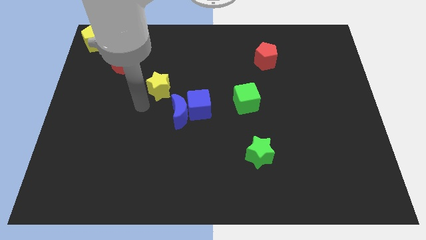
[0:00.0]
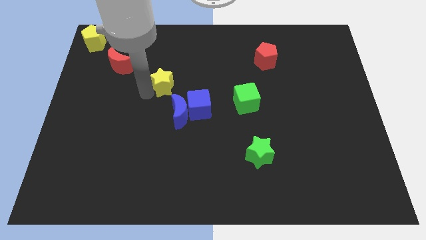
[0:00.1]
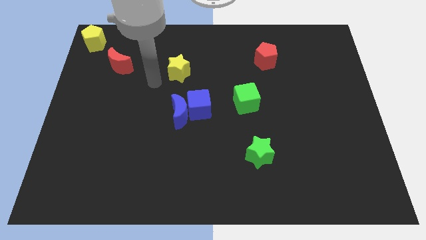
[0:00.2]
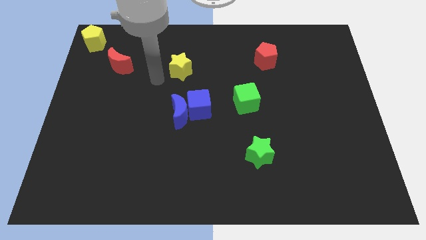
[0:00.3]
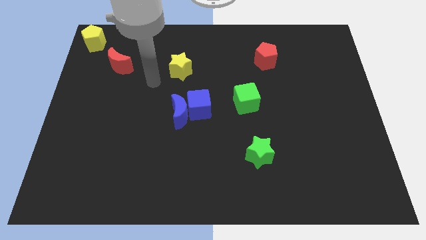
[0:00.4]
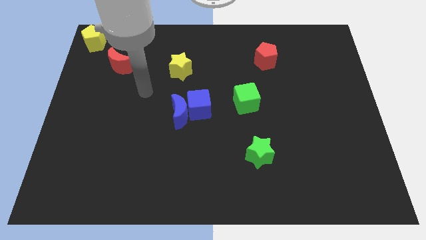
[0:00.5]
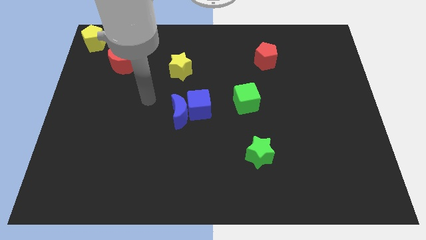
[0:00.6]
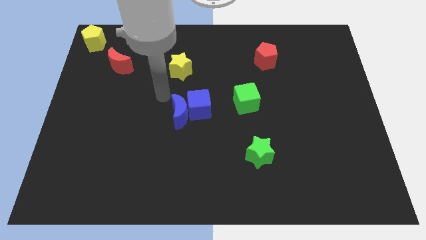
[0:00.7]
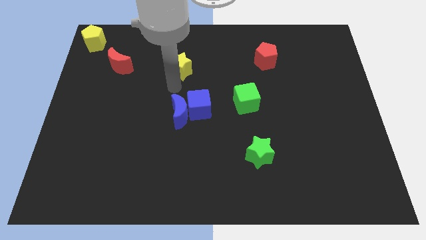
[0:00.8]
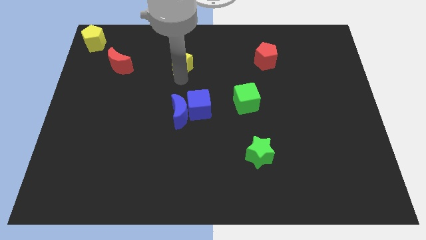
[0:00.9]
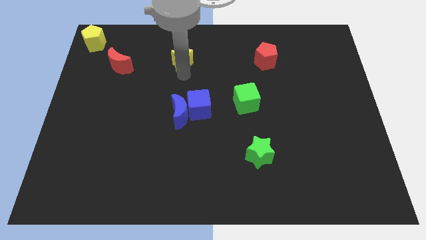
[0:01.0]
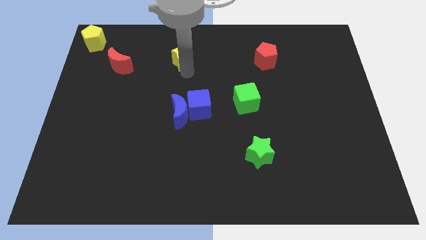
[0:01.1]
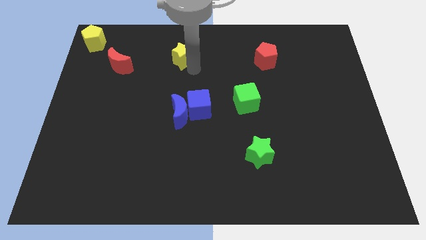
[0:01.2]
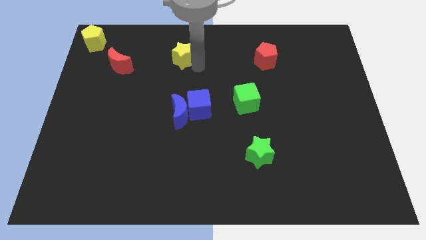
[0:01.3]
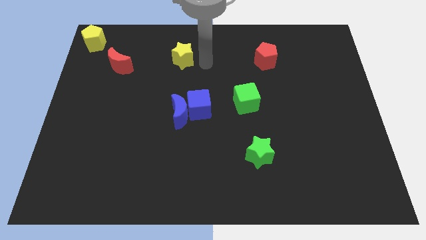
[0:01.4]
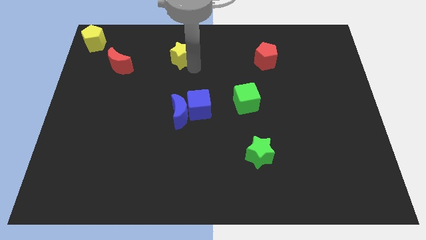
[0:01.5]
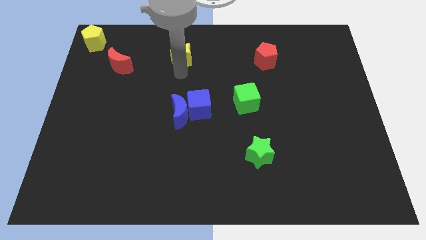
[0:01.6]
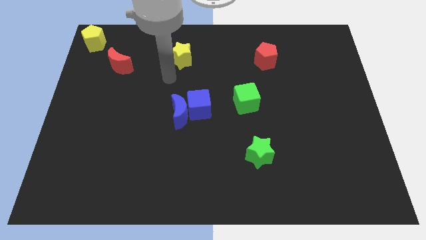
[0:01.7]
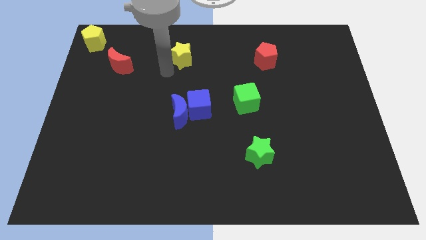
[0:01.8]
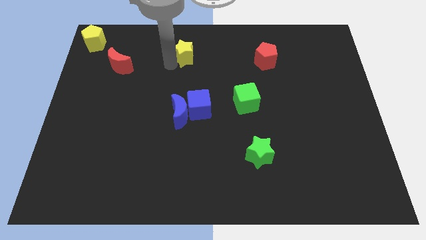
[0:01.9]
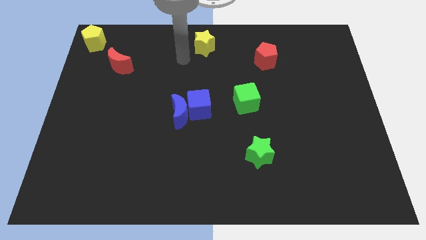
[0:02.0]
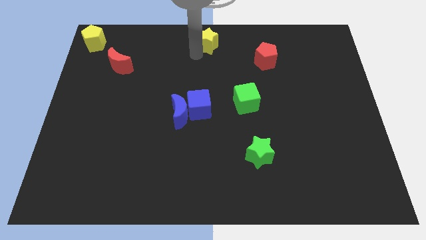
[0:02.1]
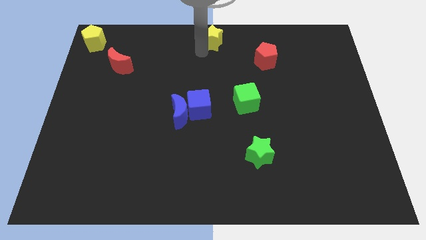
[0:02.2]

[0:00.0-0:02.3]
push the yellow star to the top center of the board

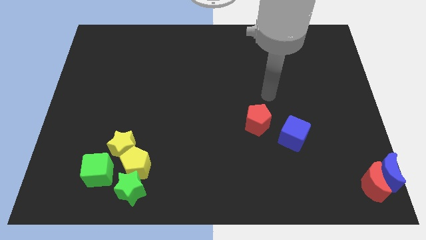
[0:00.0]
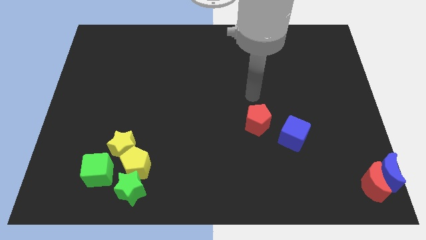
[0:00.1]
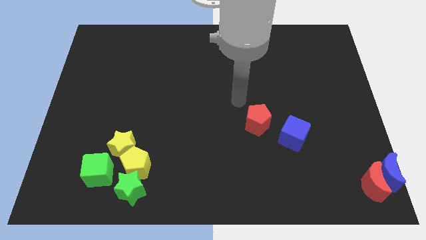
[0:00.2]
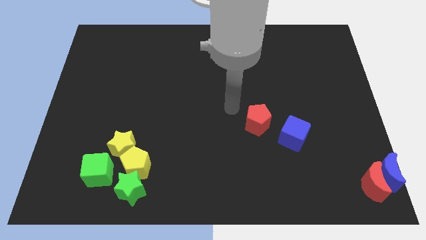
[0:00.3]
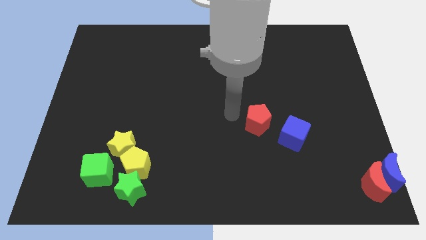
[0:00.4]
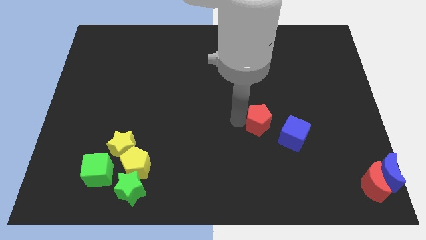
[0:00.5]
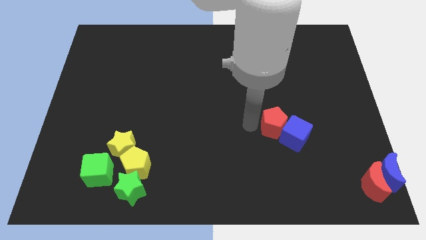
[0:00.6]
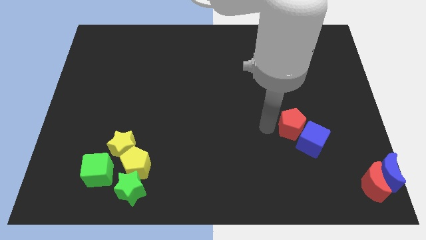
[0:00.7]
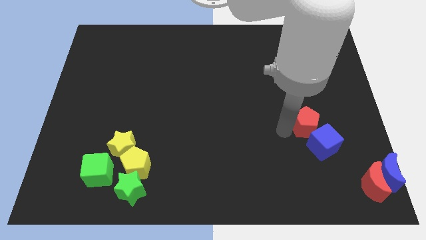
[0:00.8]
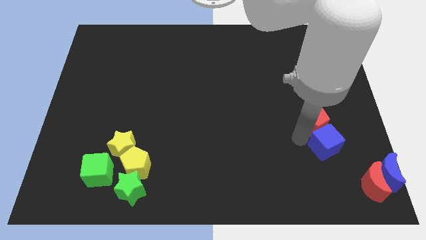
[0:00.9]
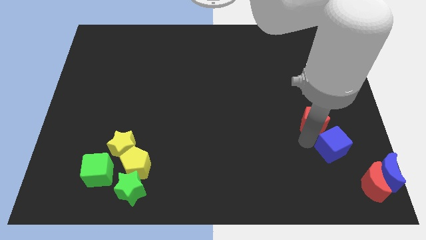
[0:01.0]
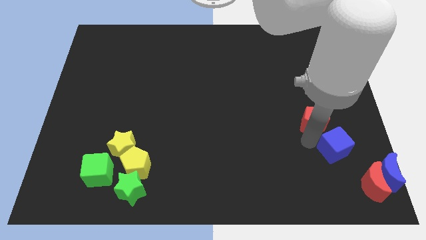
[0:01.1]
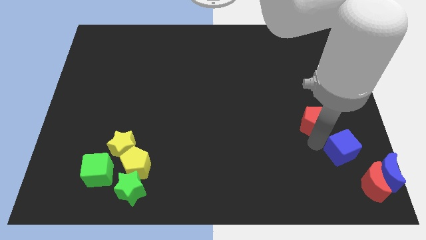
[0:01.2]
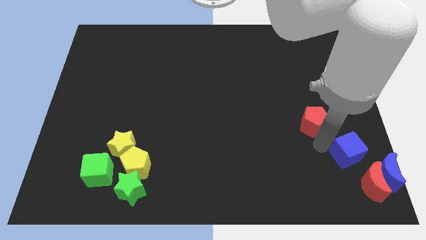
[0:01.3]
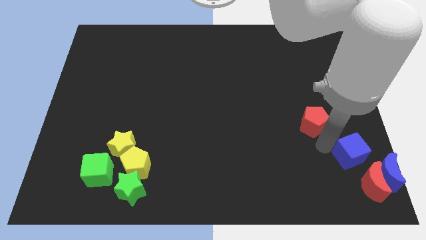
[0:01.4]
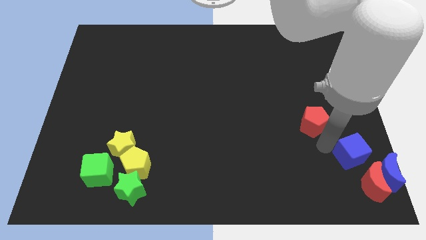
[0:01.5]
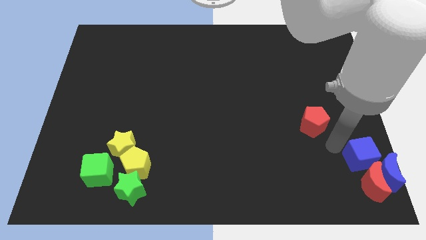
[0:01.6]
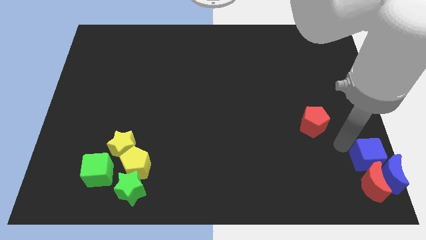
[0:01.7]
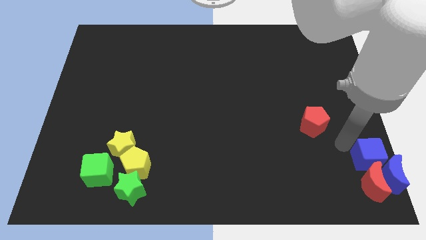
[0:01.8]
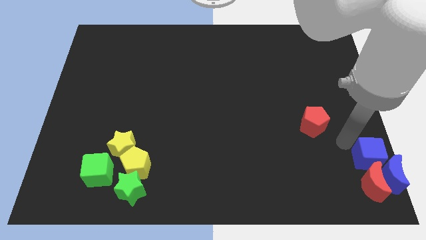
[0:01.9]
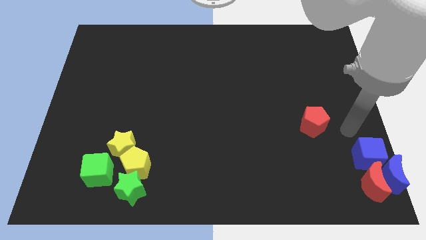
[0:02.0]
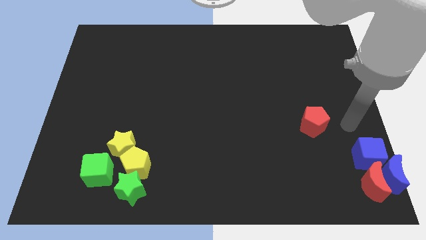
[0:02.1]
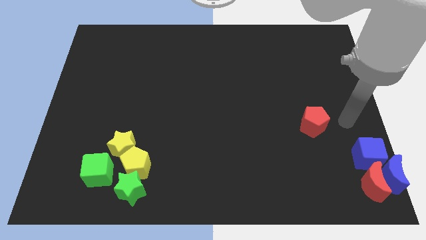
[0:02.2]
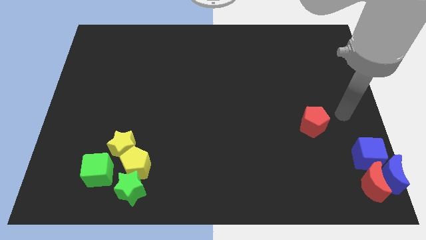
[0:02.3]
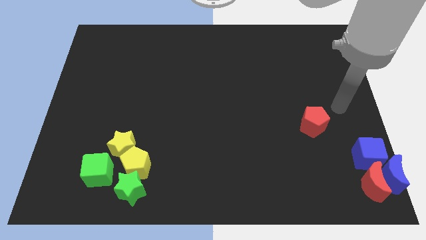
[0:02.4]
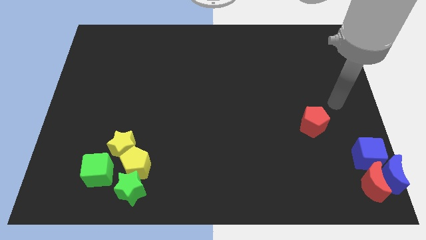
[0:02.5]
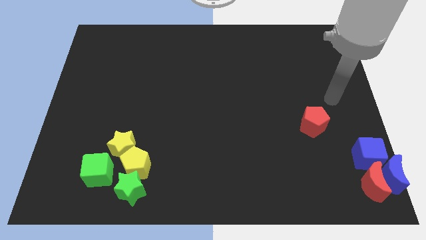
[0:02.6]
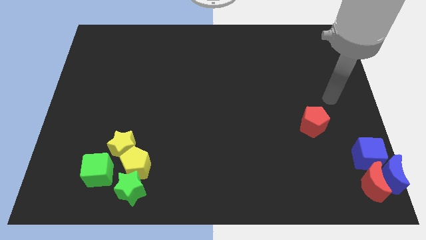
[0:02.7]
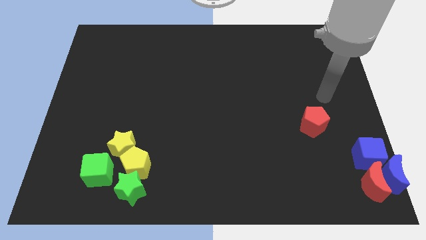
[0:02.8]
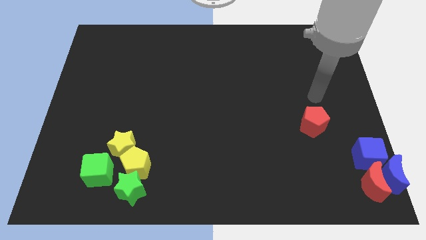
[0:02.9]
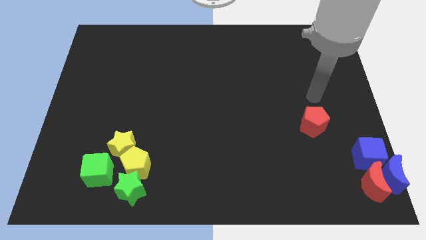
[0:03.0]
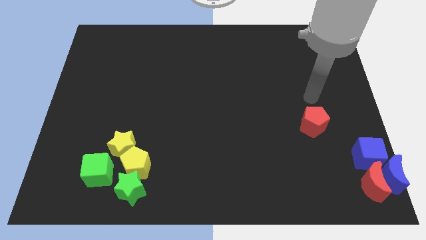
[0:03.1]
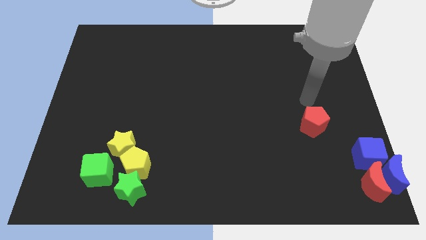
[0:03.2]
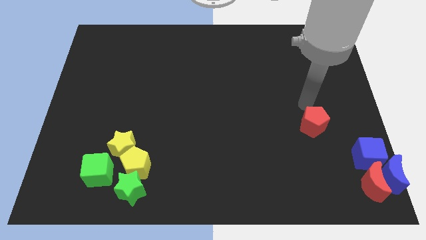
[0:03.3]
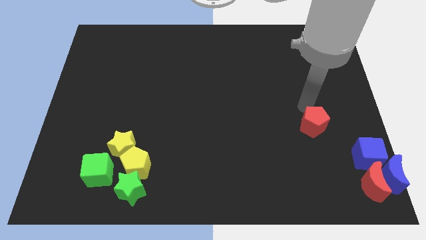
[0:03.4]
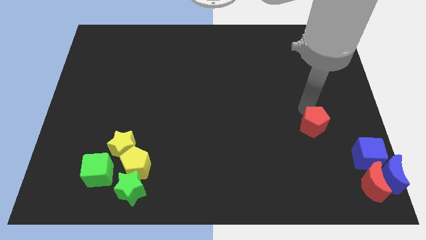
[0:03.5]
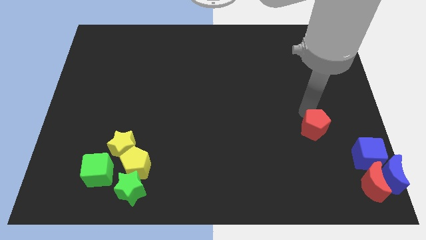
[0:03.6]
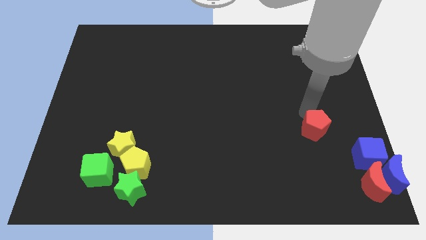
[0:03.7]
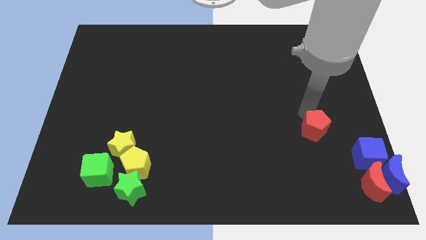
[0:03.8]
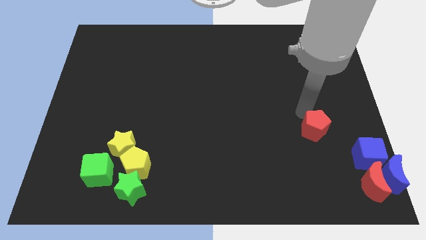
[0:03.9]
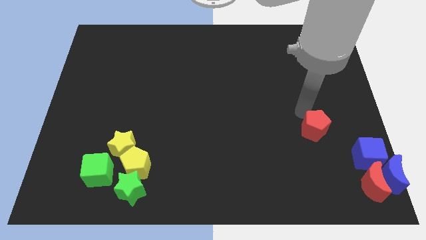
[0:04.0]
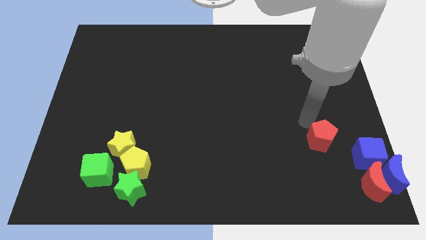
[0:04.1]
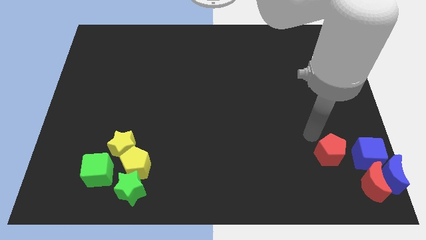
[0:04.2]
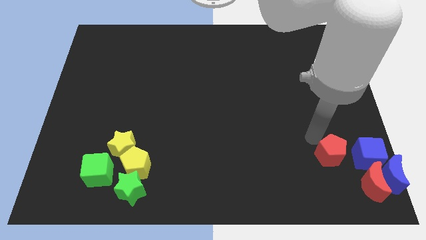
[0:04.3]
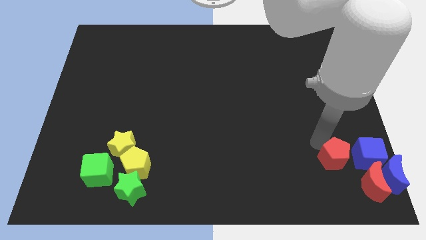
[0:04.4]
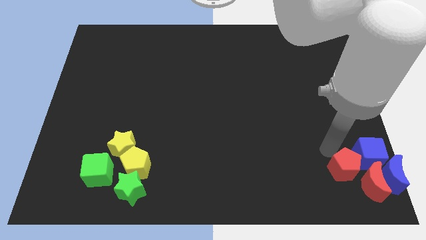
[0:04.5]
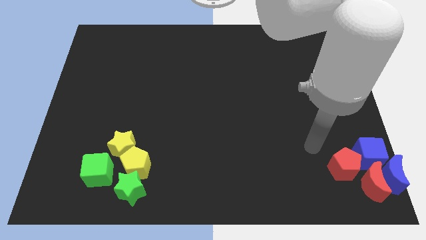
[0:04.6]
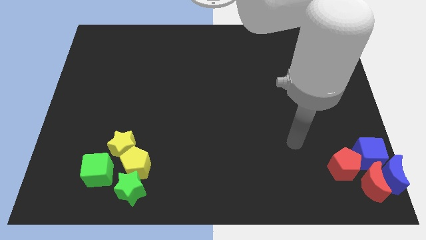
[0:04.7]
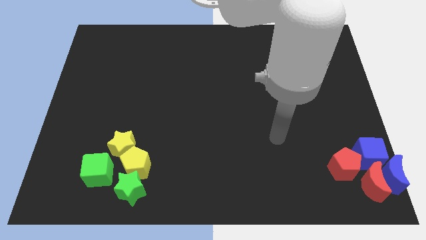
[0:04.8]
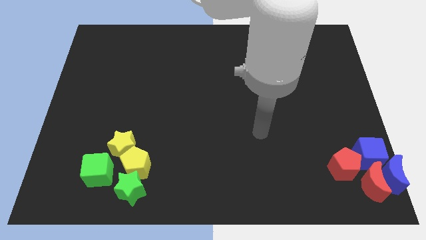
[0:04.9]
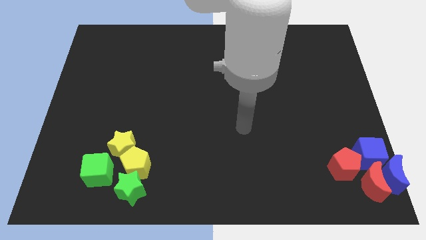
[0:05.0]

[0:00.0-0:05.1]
move the blue cube and the red pentagon towards the crescents

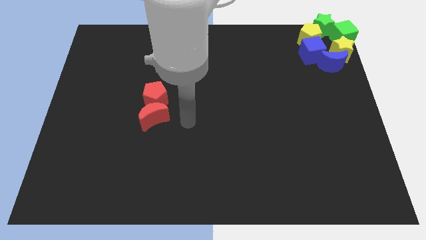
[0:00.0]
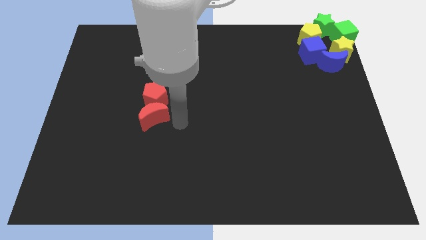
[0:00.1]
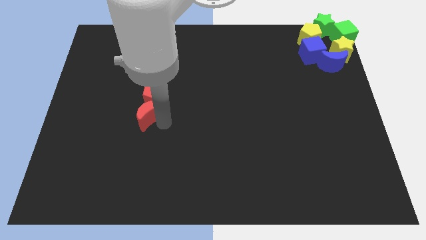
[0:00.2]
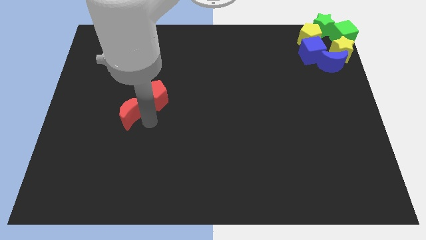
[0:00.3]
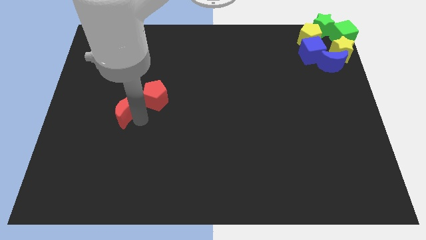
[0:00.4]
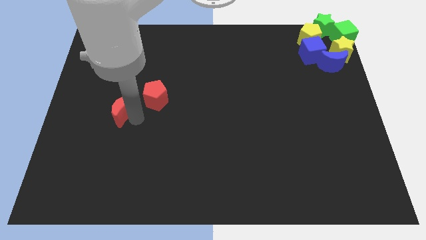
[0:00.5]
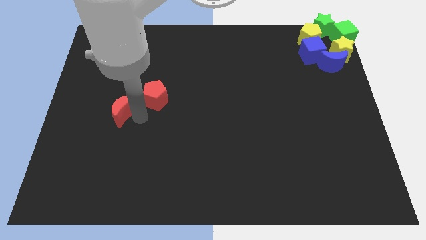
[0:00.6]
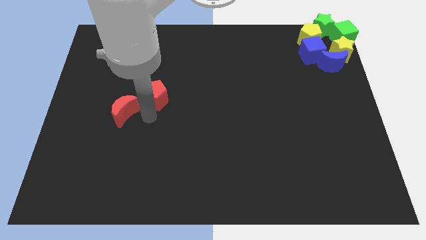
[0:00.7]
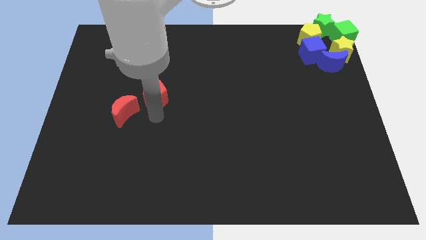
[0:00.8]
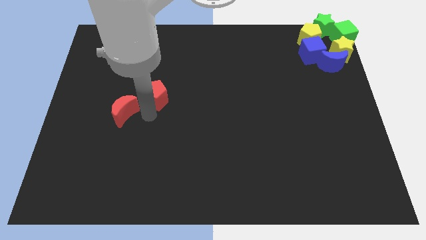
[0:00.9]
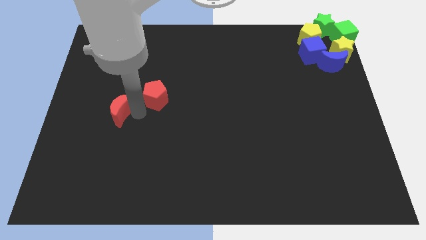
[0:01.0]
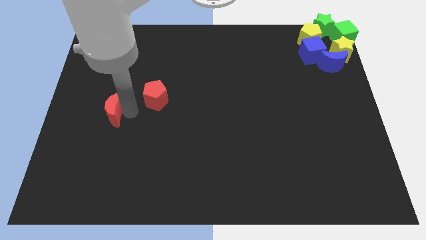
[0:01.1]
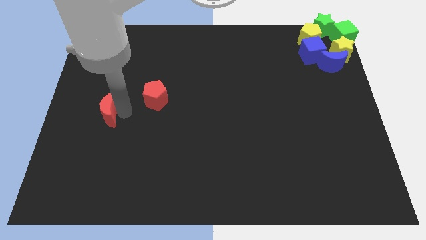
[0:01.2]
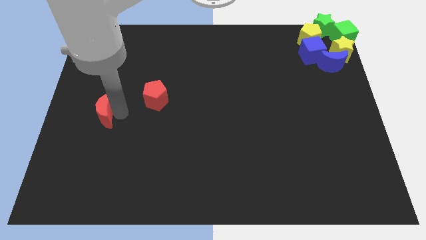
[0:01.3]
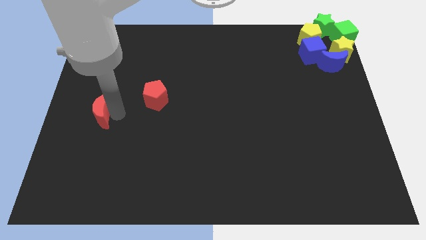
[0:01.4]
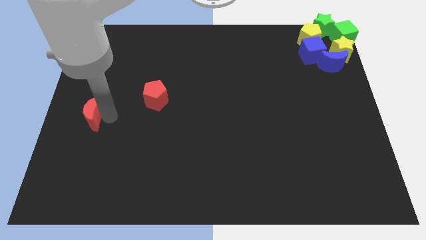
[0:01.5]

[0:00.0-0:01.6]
push the red crescent to the left of the board
